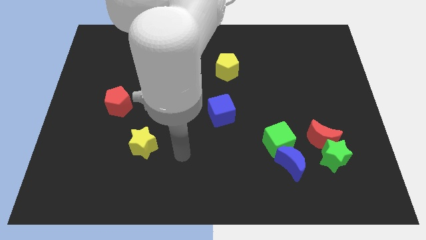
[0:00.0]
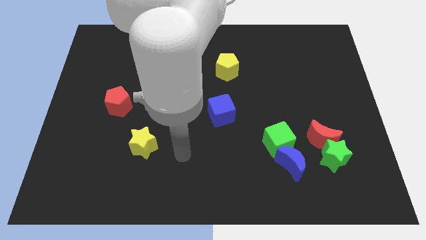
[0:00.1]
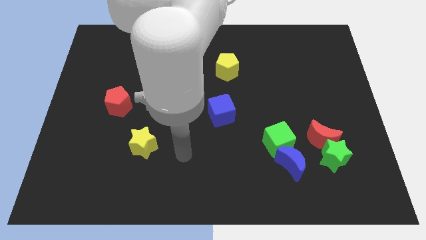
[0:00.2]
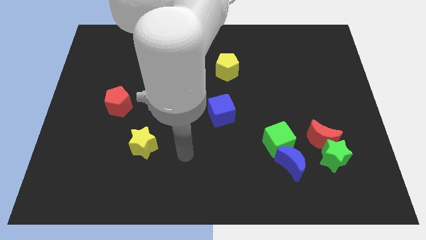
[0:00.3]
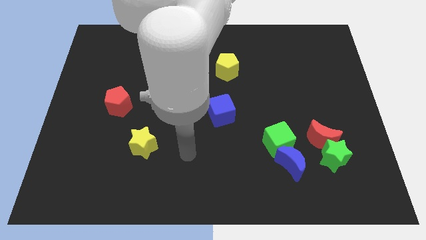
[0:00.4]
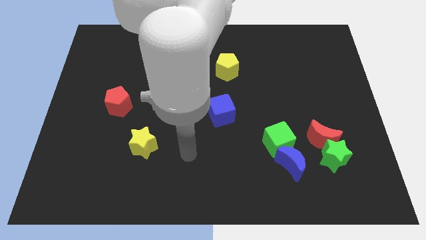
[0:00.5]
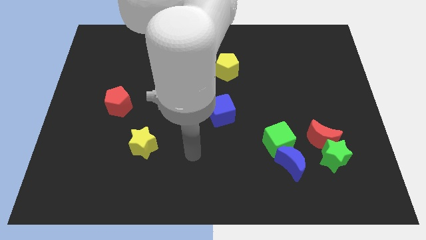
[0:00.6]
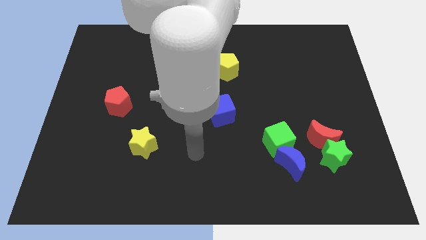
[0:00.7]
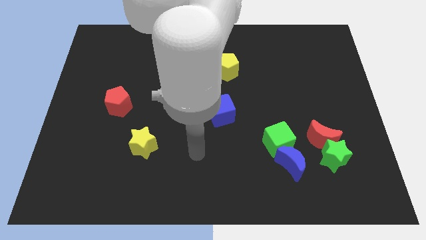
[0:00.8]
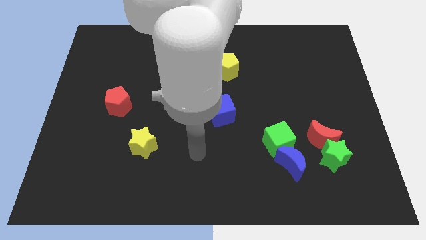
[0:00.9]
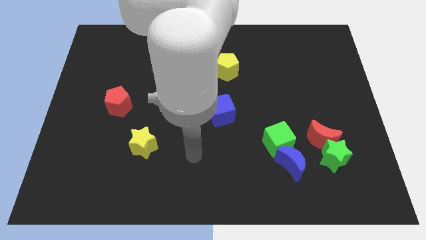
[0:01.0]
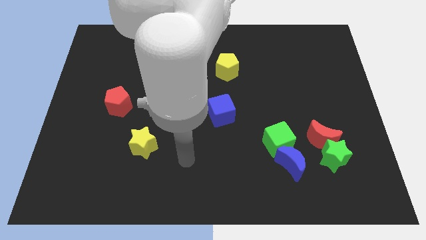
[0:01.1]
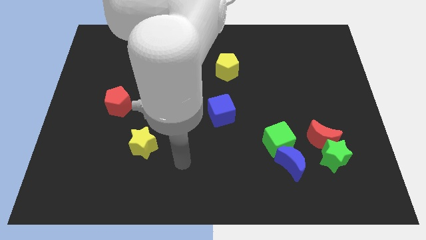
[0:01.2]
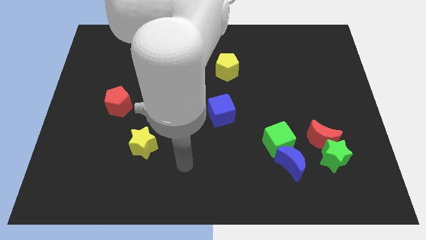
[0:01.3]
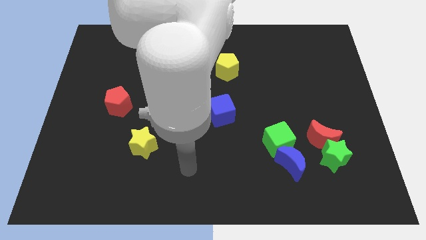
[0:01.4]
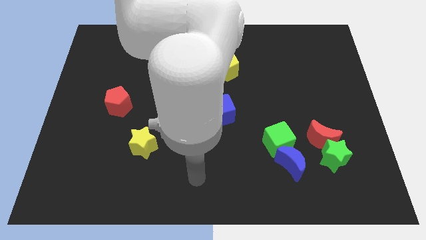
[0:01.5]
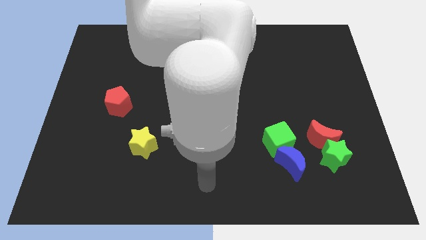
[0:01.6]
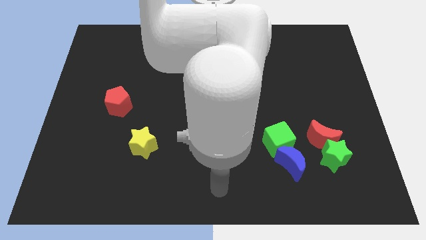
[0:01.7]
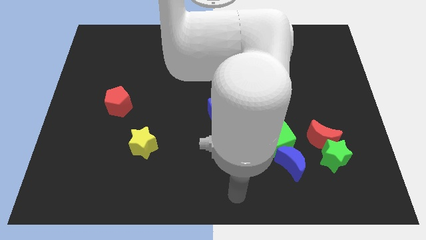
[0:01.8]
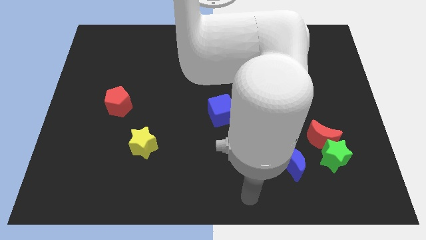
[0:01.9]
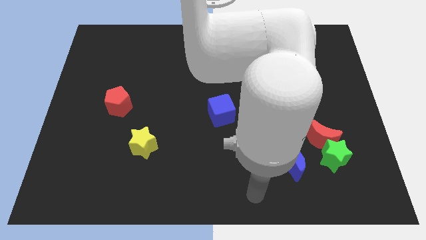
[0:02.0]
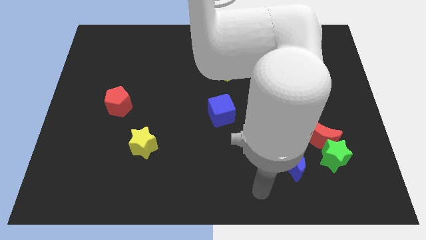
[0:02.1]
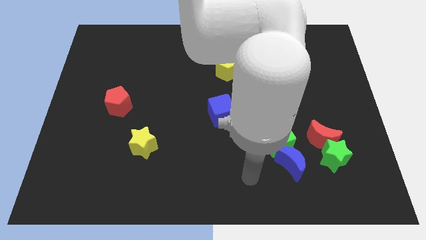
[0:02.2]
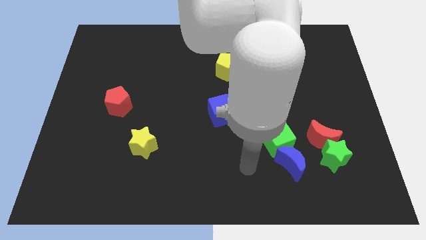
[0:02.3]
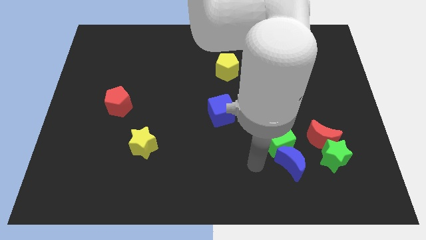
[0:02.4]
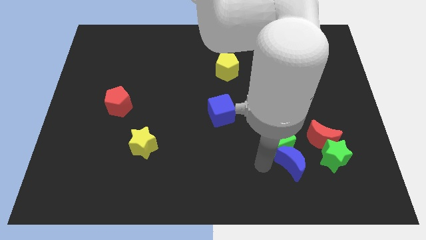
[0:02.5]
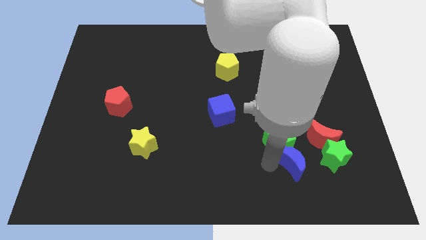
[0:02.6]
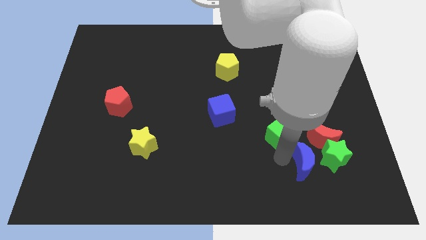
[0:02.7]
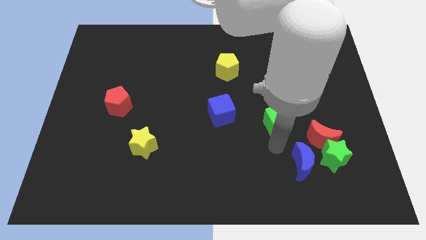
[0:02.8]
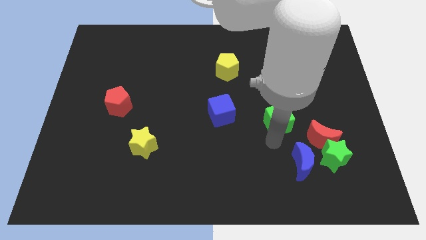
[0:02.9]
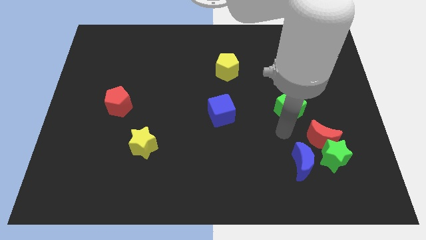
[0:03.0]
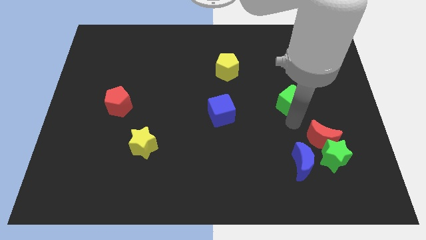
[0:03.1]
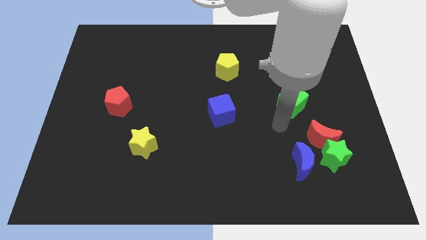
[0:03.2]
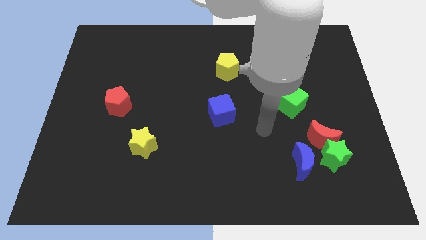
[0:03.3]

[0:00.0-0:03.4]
separate green cube from blue moon

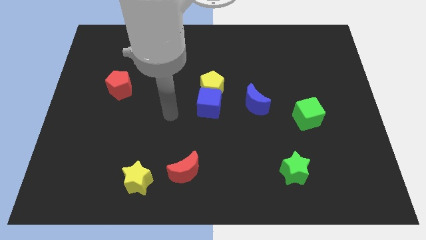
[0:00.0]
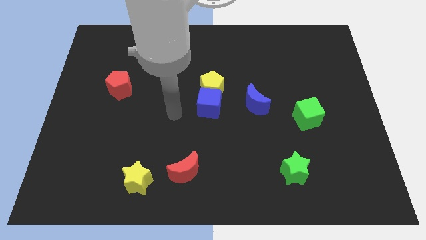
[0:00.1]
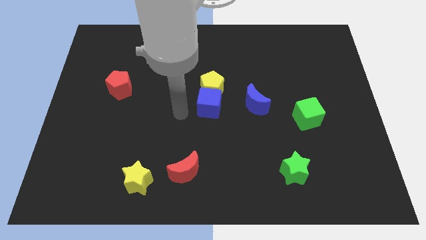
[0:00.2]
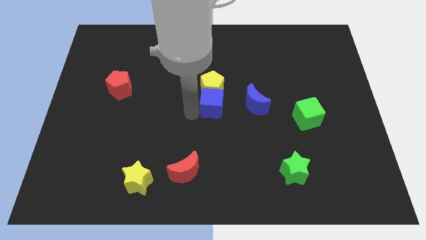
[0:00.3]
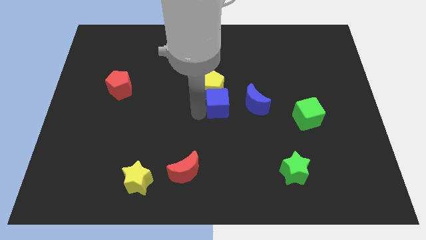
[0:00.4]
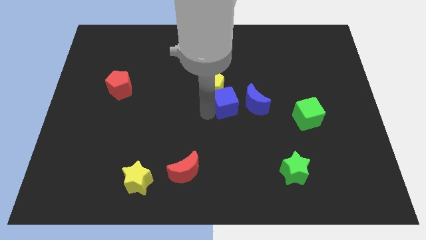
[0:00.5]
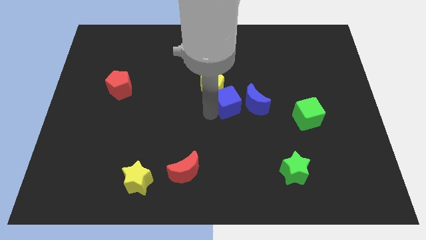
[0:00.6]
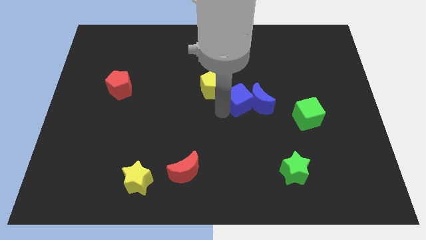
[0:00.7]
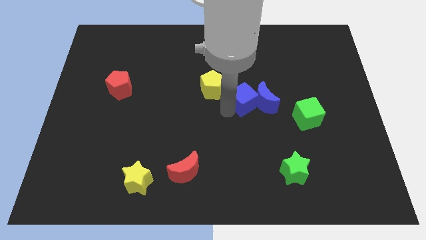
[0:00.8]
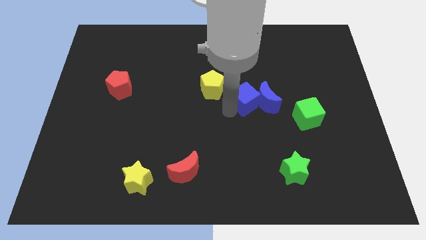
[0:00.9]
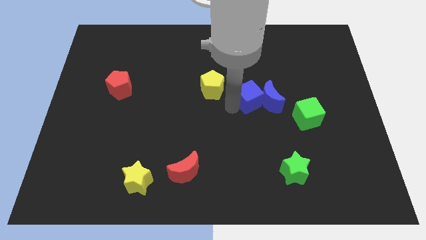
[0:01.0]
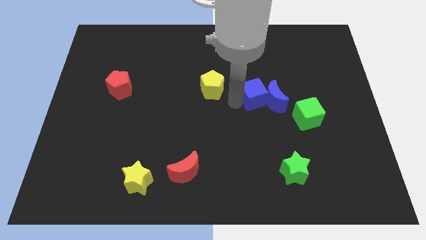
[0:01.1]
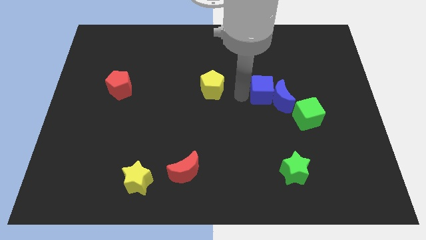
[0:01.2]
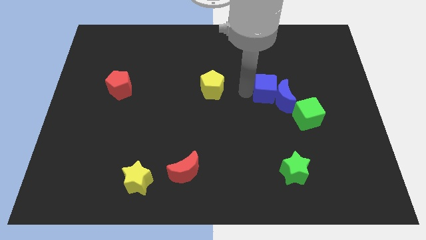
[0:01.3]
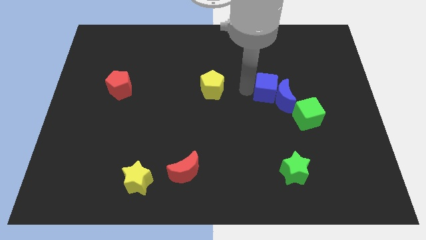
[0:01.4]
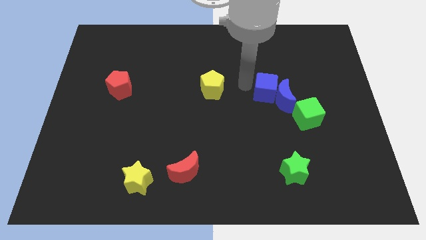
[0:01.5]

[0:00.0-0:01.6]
place blue cube parallel right to yellow pentagon

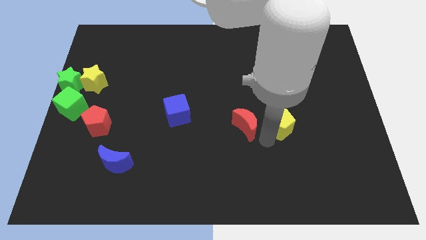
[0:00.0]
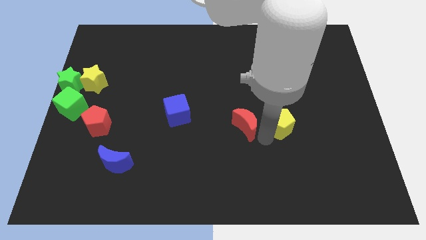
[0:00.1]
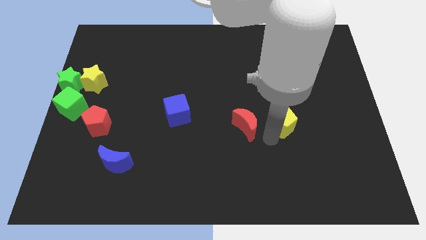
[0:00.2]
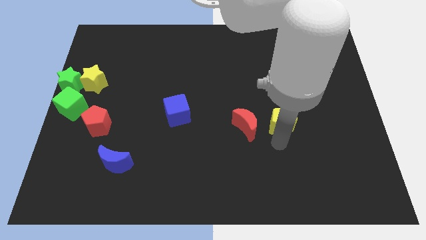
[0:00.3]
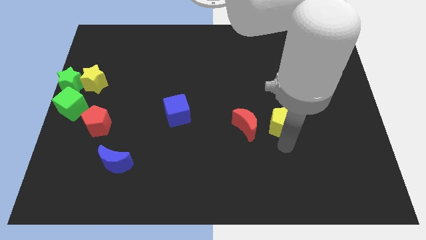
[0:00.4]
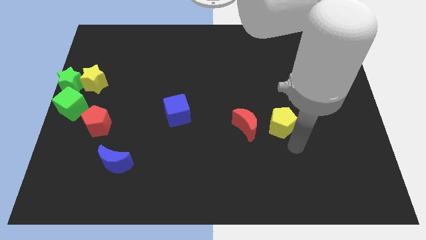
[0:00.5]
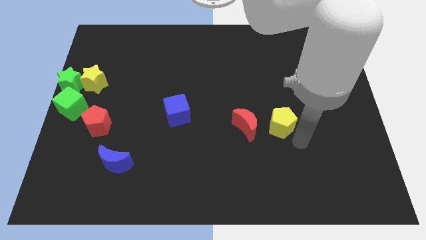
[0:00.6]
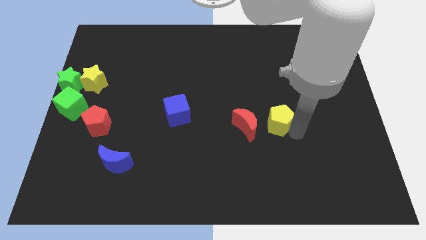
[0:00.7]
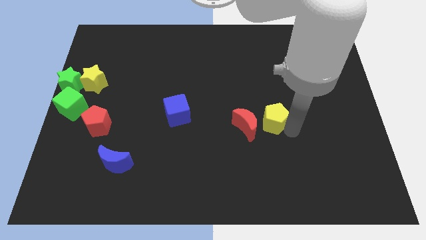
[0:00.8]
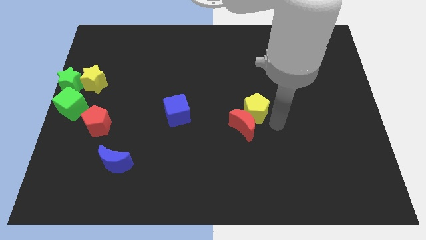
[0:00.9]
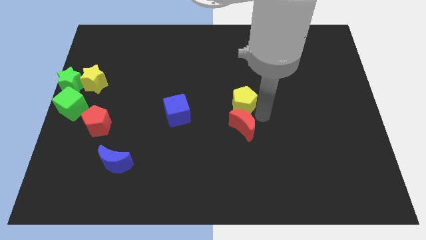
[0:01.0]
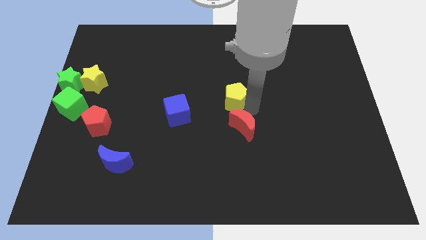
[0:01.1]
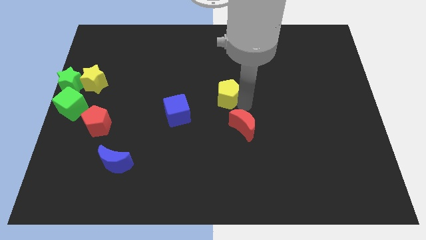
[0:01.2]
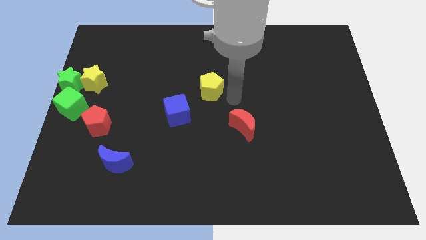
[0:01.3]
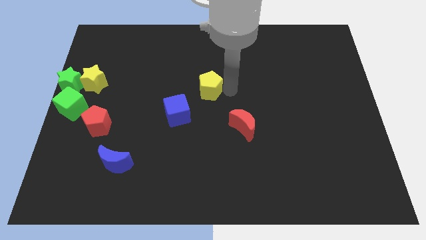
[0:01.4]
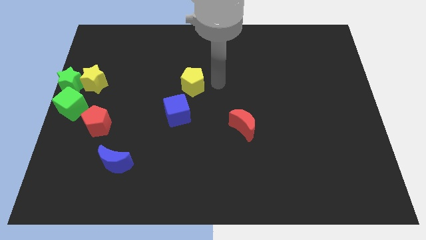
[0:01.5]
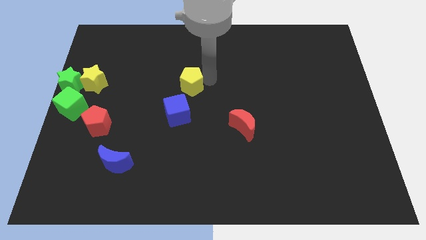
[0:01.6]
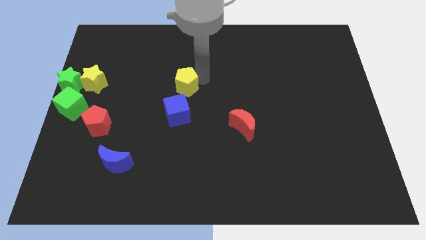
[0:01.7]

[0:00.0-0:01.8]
move the yellow pentagon above the blue cube

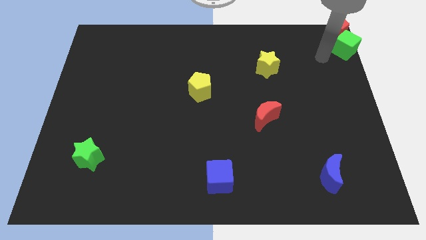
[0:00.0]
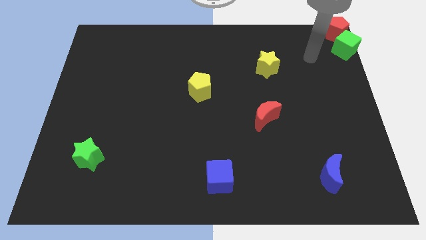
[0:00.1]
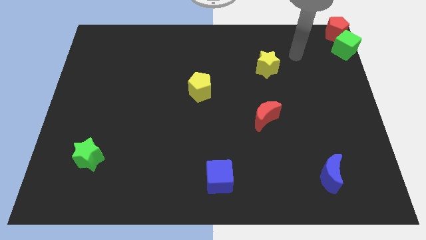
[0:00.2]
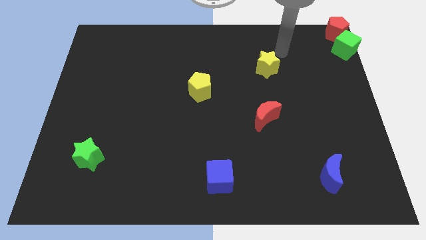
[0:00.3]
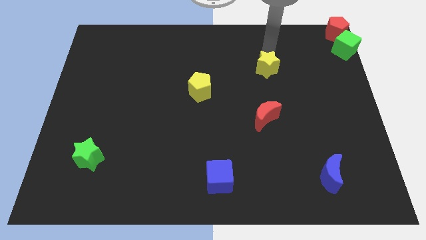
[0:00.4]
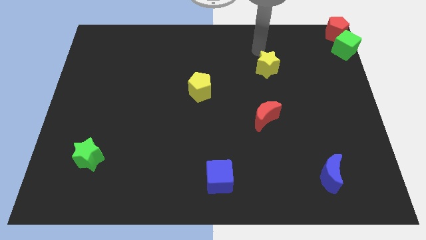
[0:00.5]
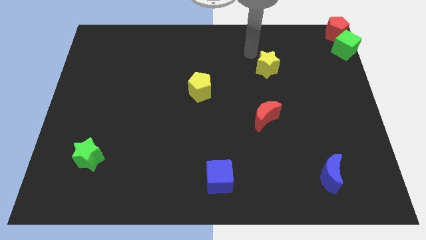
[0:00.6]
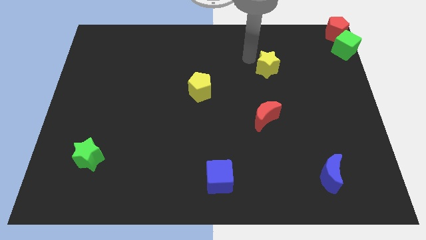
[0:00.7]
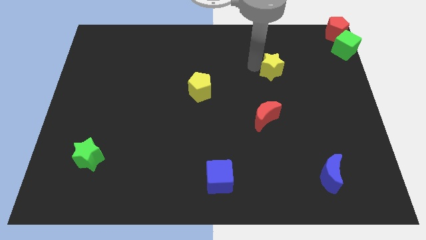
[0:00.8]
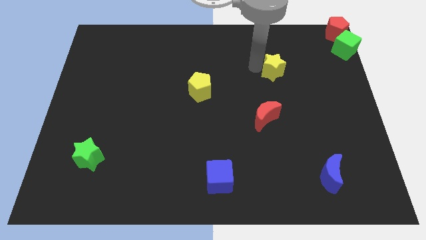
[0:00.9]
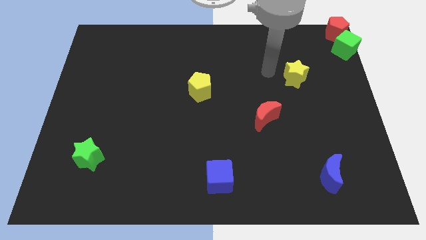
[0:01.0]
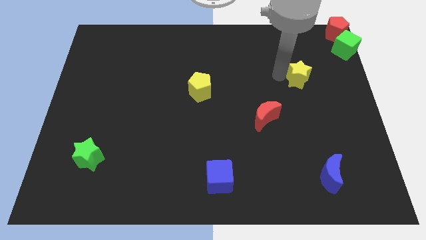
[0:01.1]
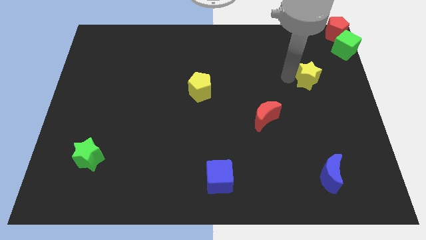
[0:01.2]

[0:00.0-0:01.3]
put the yellow star diagonally in between the green cube and red moon

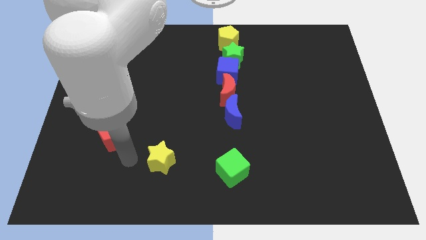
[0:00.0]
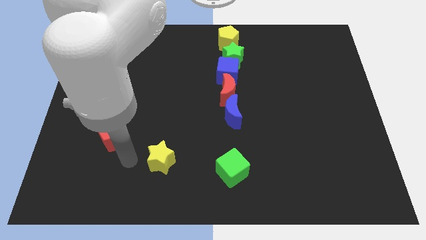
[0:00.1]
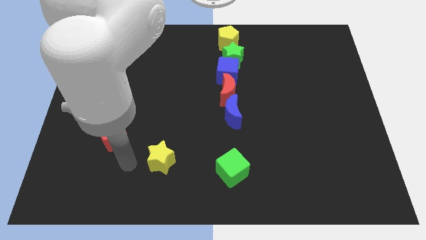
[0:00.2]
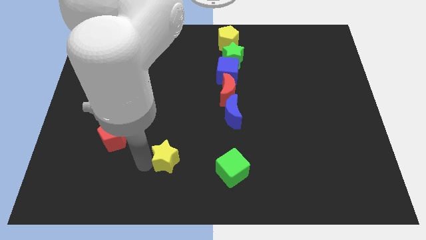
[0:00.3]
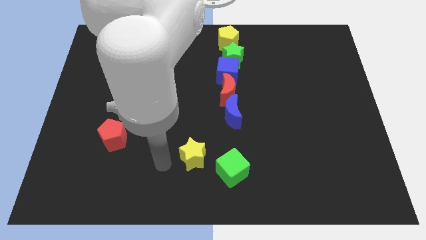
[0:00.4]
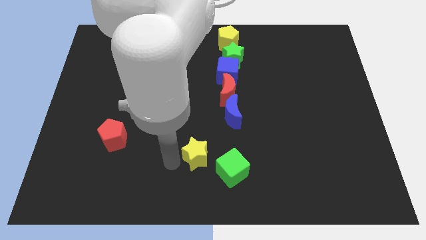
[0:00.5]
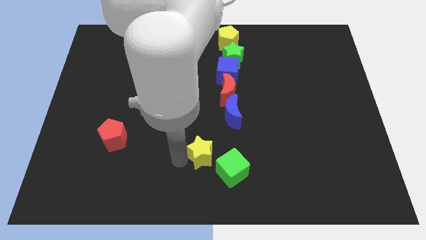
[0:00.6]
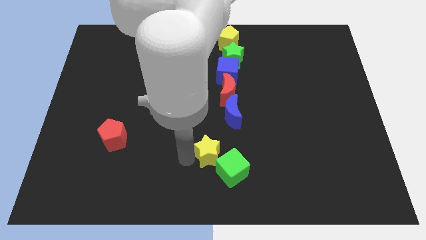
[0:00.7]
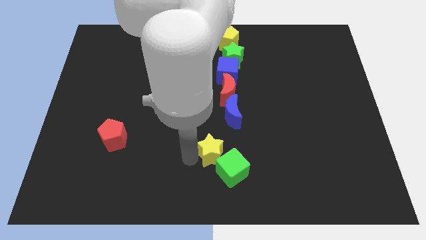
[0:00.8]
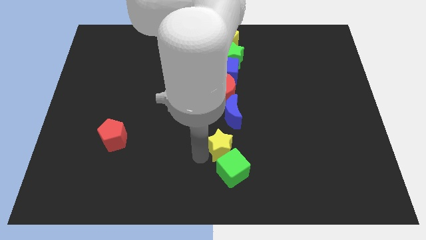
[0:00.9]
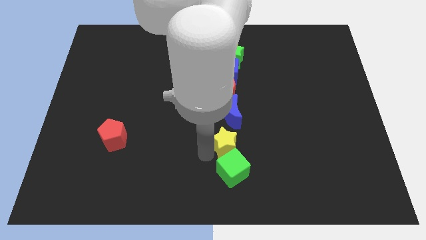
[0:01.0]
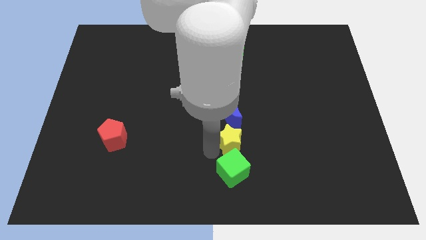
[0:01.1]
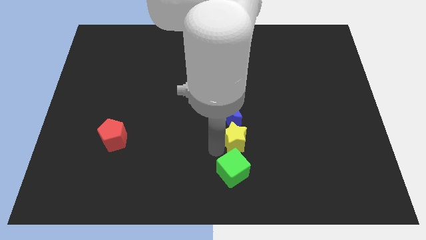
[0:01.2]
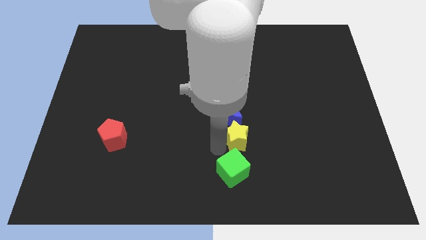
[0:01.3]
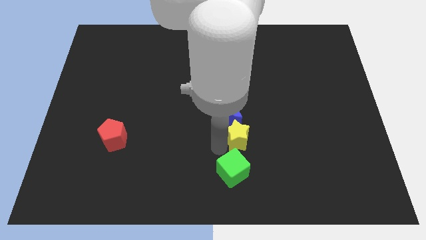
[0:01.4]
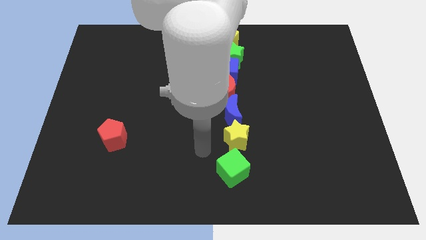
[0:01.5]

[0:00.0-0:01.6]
place yellow star below above green cube
